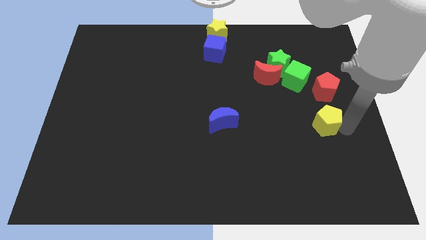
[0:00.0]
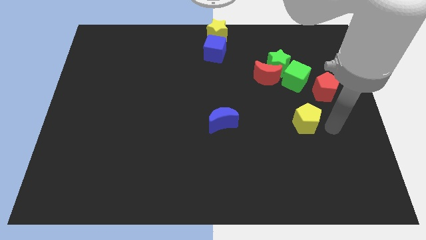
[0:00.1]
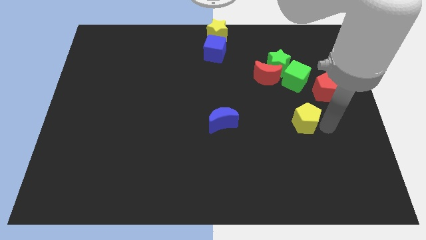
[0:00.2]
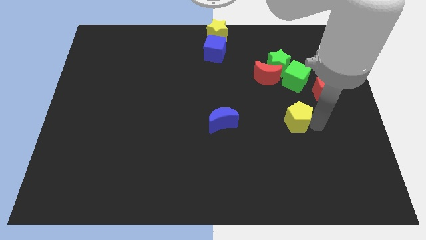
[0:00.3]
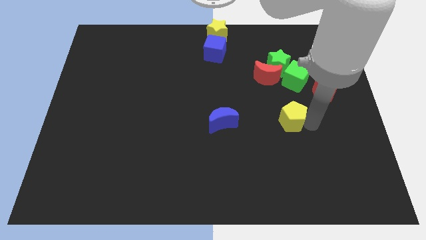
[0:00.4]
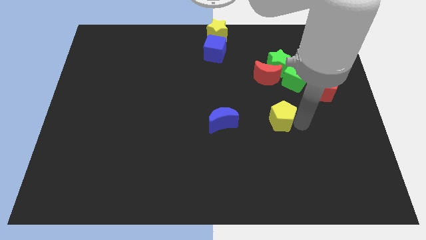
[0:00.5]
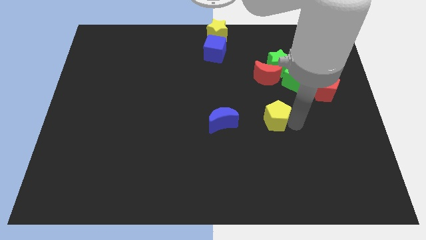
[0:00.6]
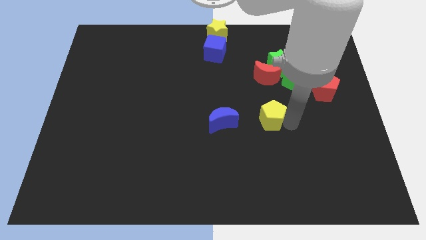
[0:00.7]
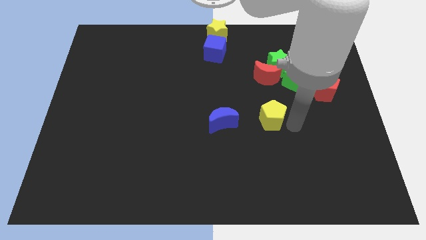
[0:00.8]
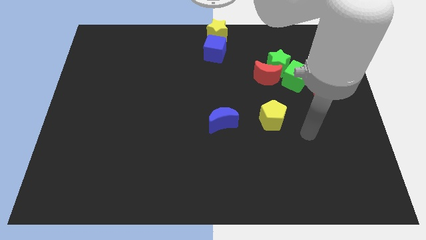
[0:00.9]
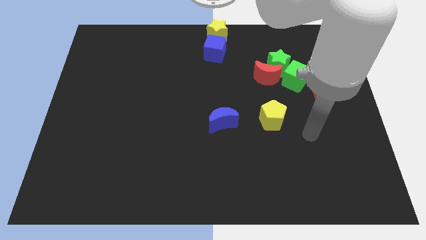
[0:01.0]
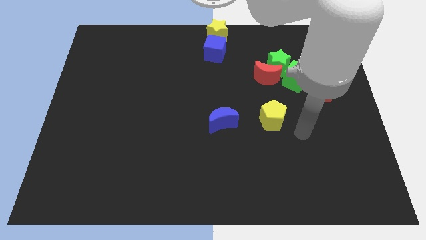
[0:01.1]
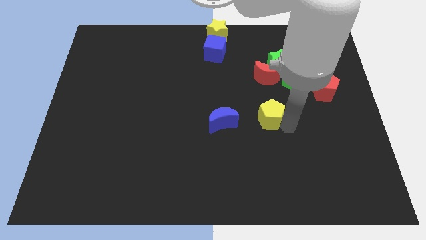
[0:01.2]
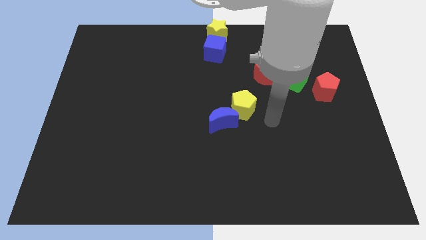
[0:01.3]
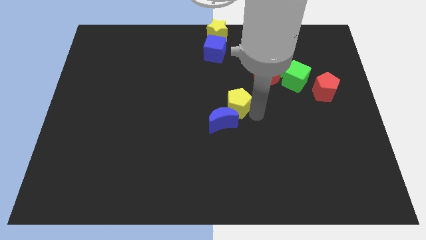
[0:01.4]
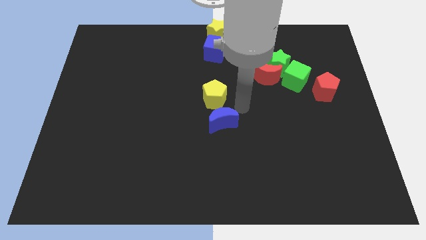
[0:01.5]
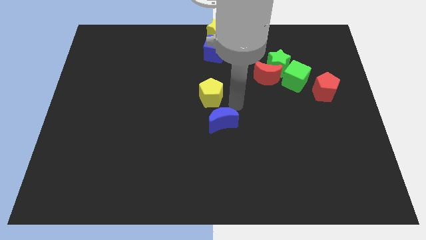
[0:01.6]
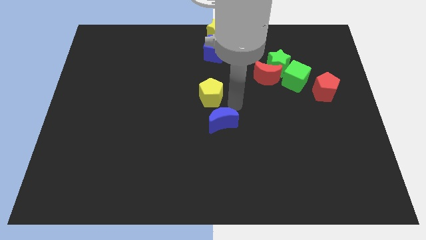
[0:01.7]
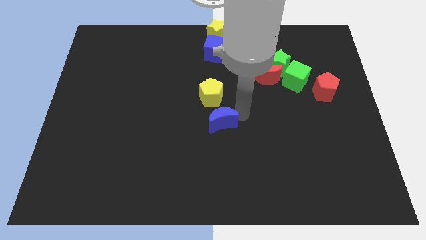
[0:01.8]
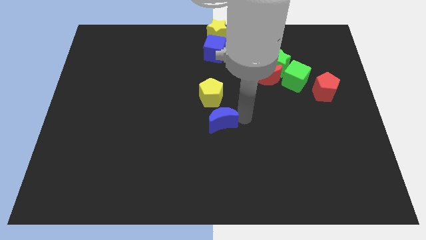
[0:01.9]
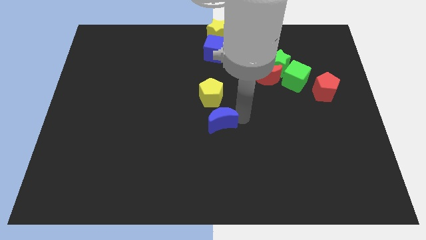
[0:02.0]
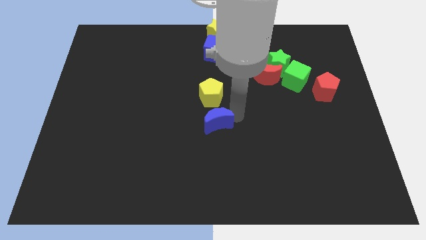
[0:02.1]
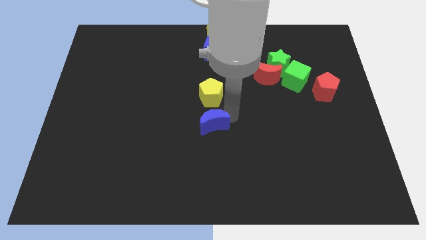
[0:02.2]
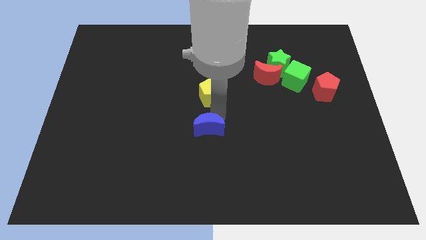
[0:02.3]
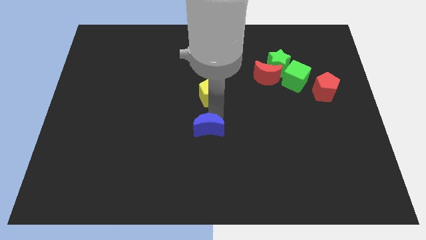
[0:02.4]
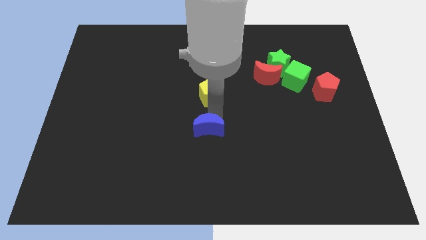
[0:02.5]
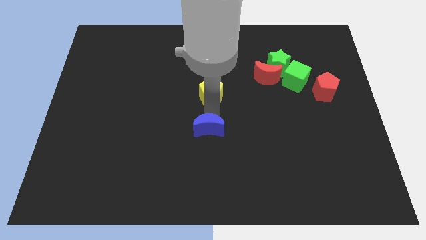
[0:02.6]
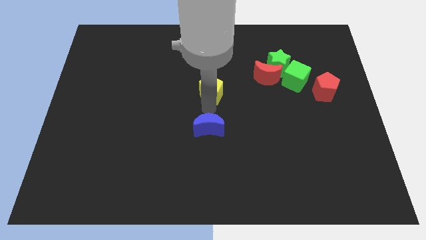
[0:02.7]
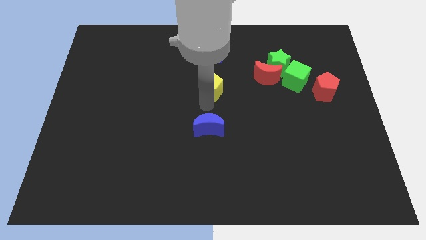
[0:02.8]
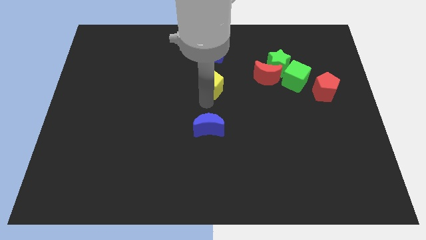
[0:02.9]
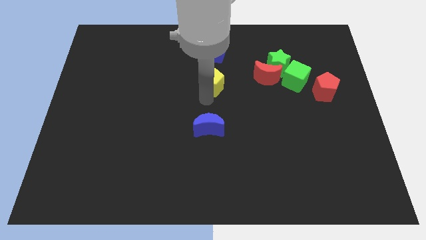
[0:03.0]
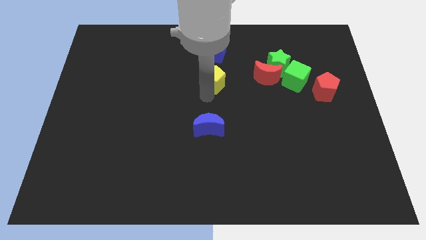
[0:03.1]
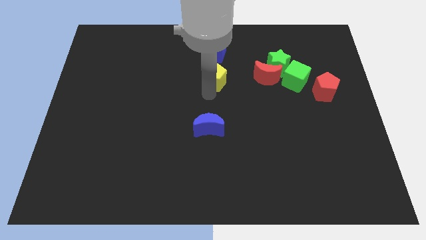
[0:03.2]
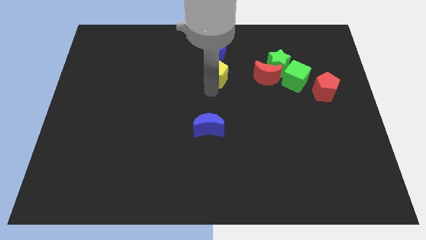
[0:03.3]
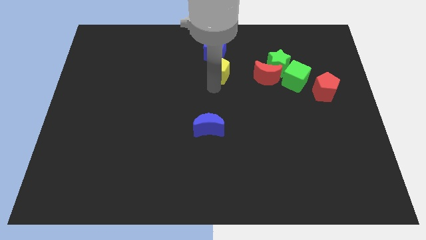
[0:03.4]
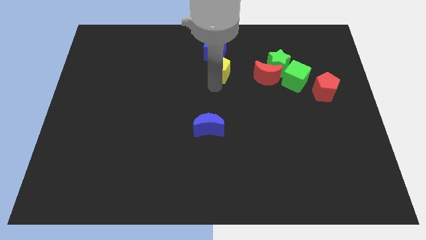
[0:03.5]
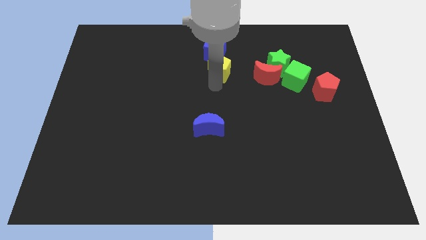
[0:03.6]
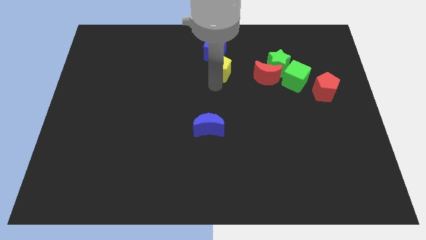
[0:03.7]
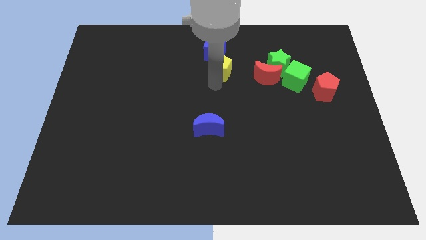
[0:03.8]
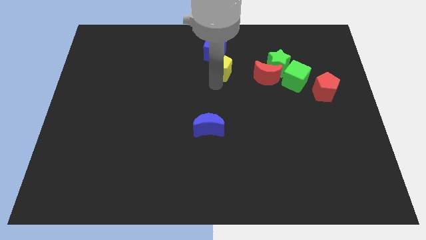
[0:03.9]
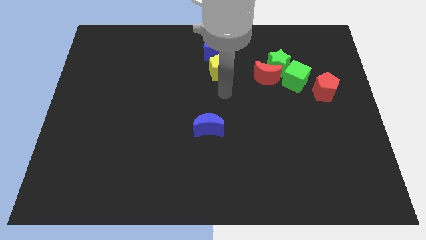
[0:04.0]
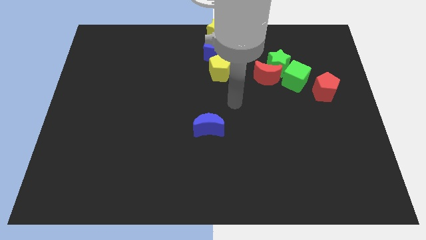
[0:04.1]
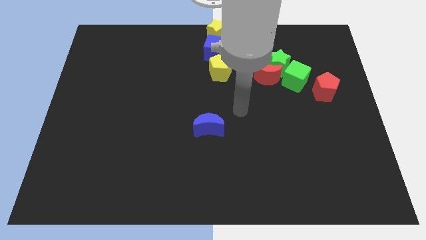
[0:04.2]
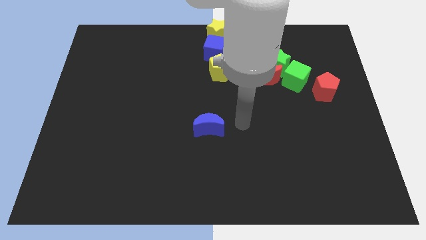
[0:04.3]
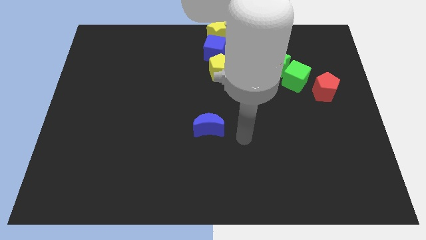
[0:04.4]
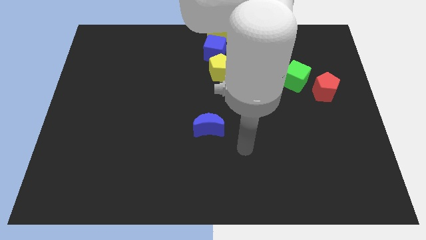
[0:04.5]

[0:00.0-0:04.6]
place the yellow pentagon to the bottom of blue cube

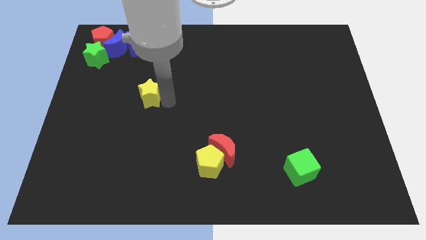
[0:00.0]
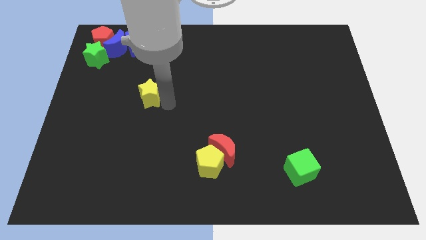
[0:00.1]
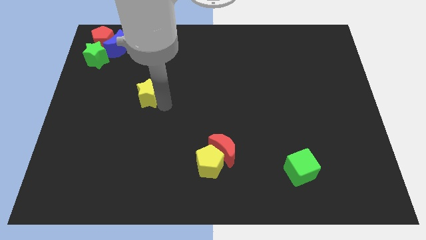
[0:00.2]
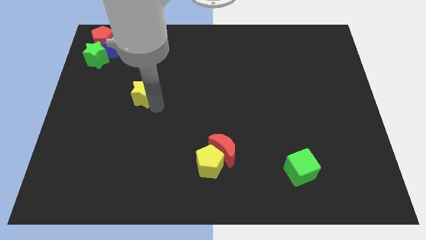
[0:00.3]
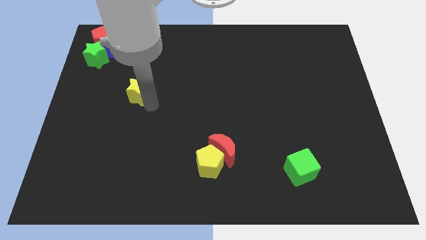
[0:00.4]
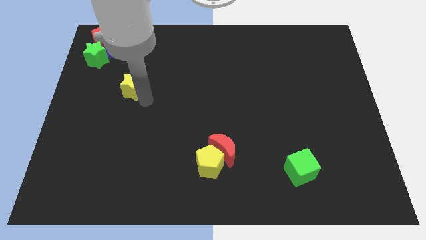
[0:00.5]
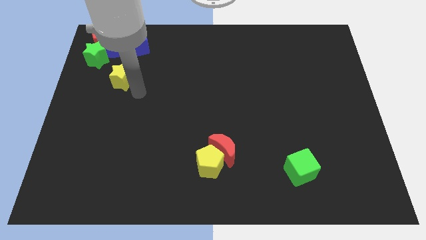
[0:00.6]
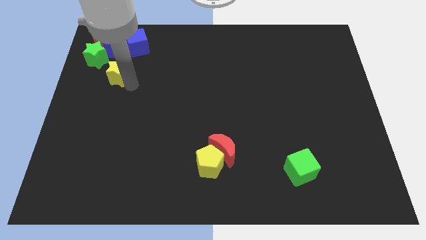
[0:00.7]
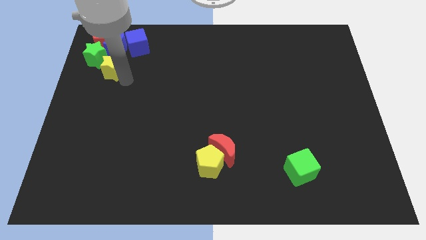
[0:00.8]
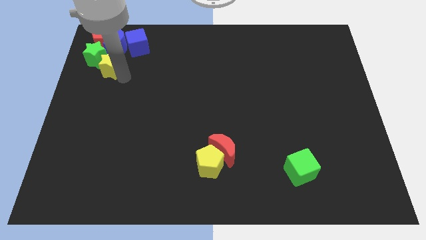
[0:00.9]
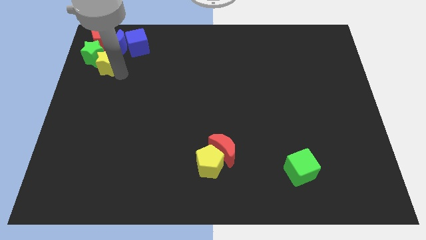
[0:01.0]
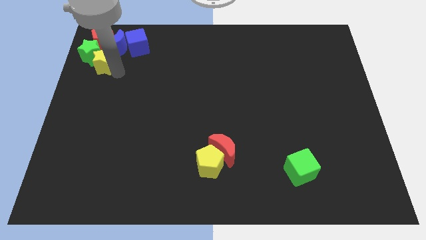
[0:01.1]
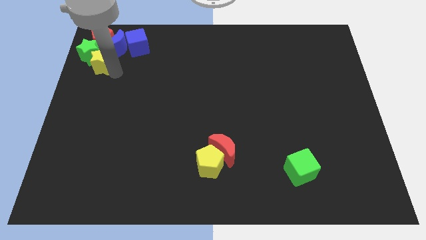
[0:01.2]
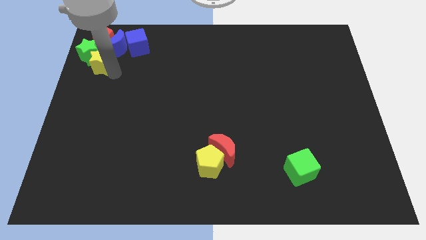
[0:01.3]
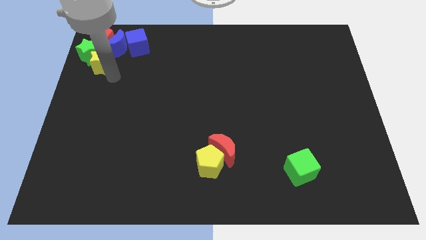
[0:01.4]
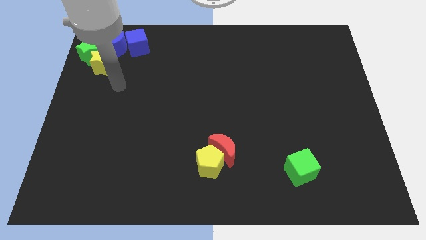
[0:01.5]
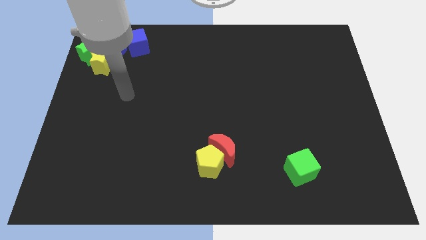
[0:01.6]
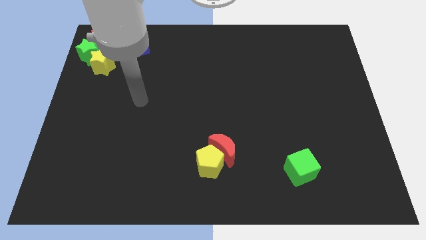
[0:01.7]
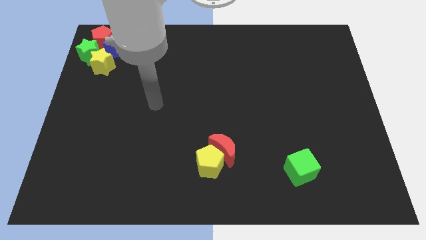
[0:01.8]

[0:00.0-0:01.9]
put the yellow star into the green star

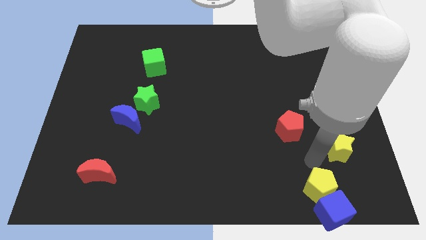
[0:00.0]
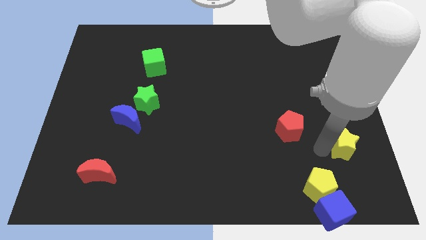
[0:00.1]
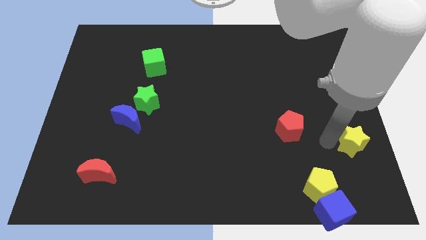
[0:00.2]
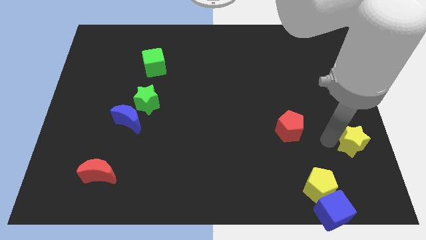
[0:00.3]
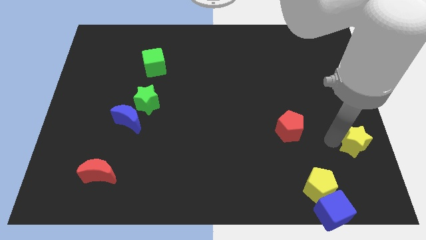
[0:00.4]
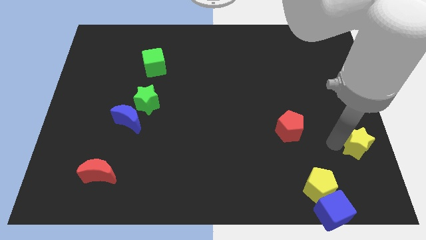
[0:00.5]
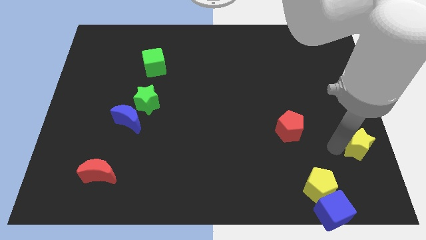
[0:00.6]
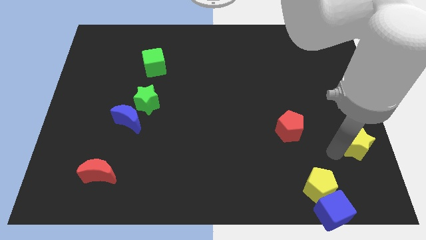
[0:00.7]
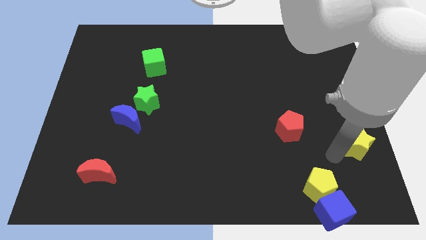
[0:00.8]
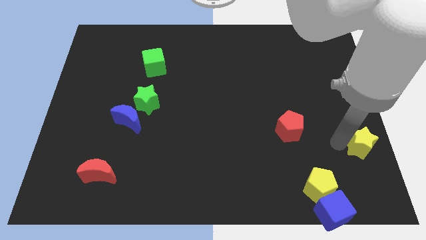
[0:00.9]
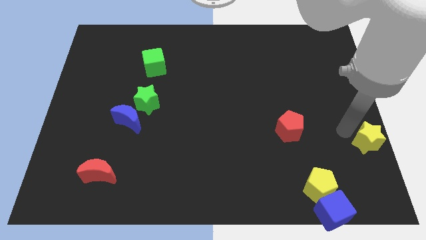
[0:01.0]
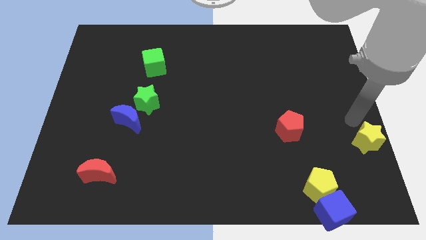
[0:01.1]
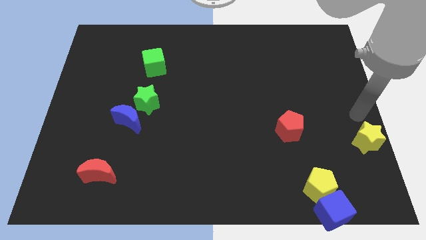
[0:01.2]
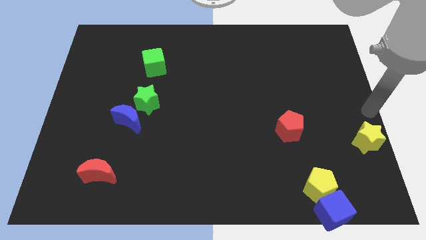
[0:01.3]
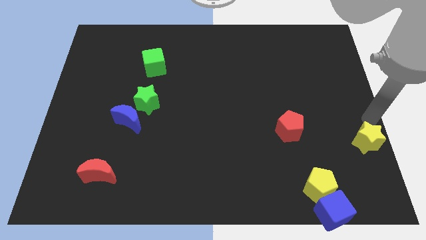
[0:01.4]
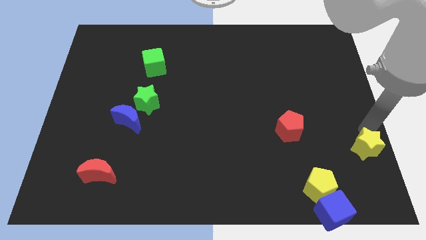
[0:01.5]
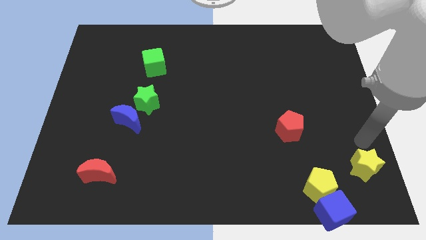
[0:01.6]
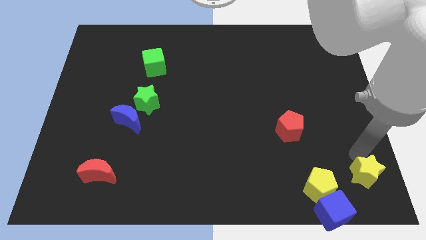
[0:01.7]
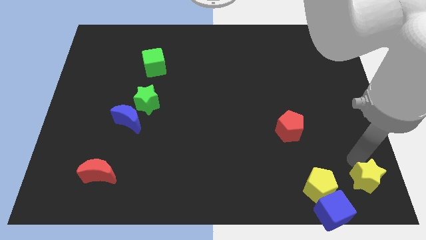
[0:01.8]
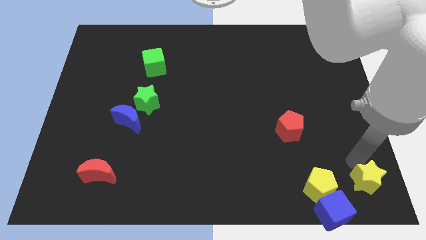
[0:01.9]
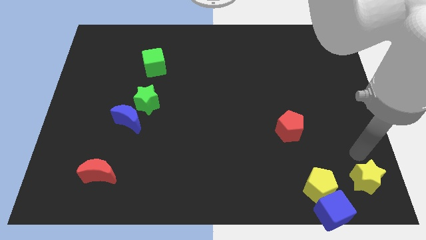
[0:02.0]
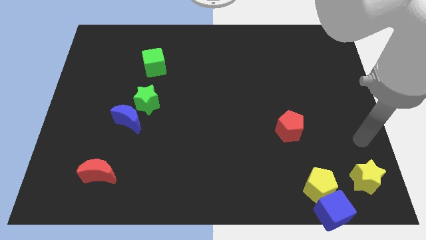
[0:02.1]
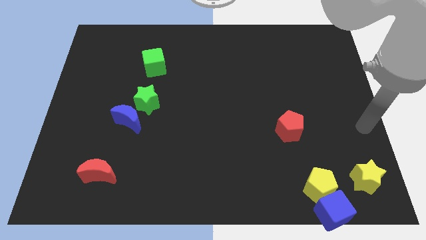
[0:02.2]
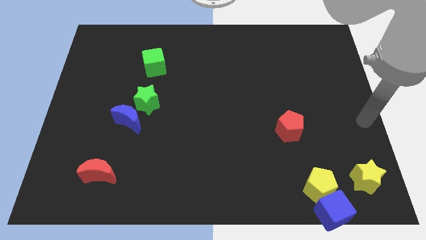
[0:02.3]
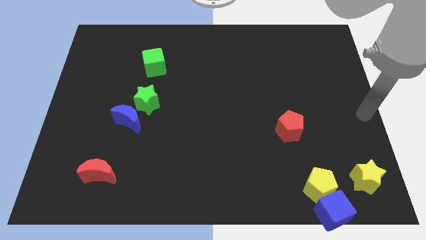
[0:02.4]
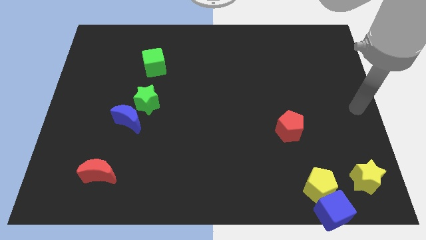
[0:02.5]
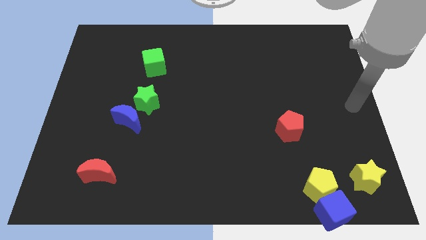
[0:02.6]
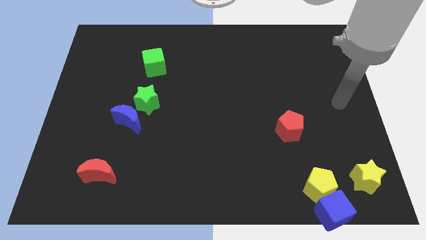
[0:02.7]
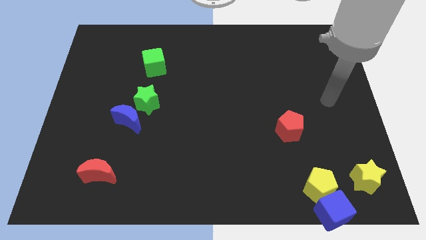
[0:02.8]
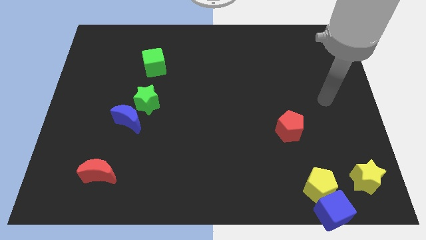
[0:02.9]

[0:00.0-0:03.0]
place the yellow star right to the yellow pentagon
